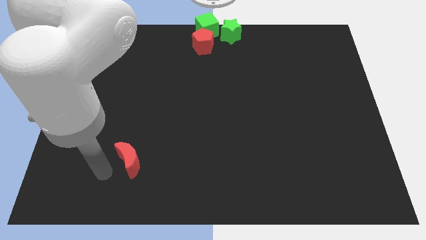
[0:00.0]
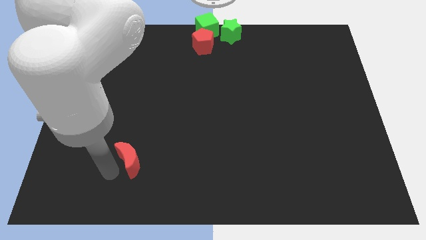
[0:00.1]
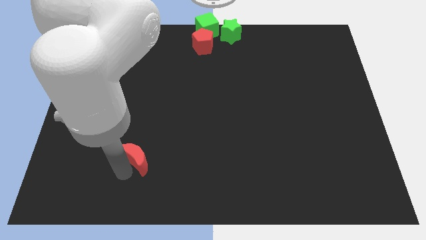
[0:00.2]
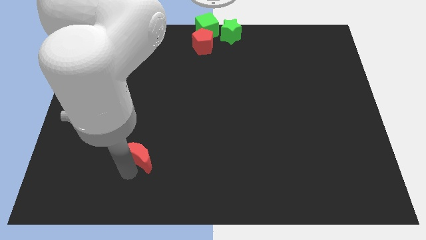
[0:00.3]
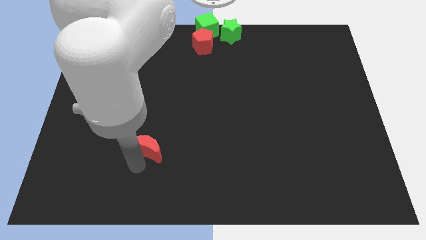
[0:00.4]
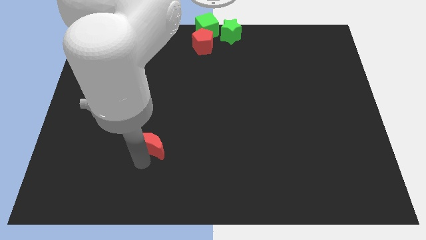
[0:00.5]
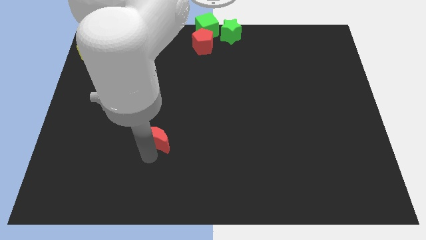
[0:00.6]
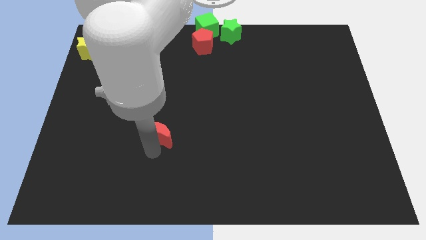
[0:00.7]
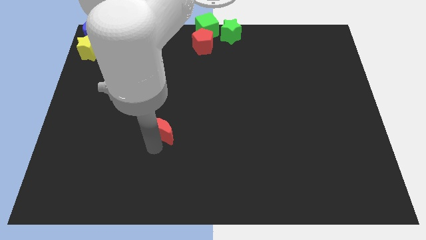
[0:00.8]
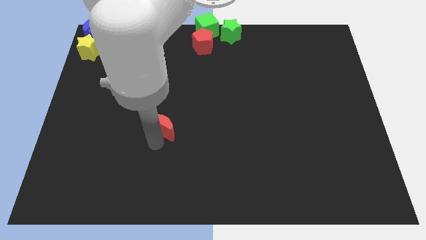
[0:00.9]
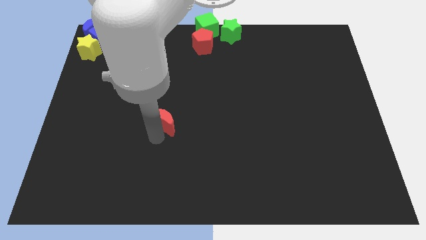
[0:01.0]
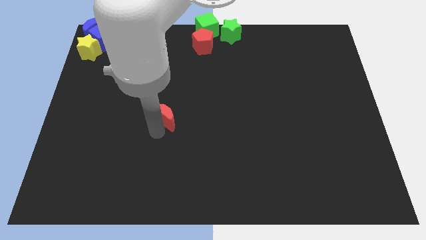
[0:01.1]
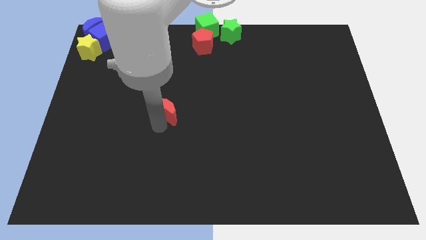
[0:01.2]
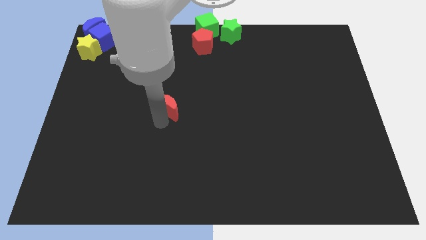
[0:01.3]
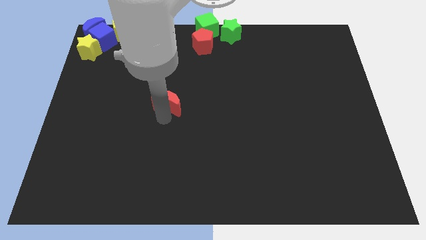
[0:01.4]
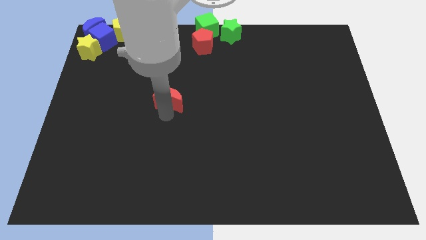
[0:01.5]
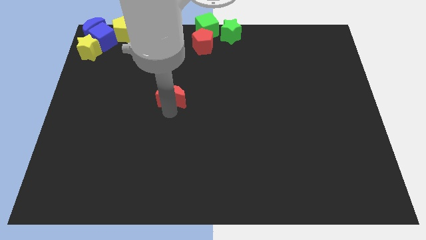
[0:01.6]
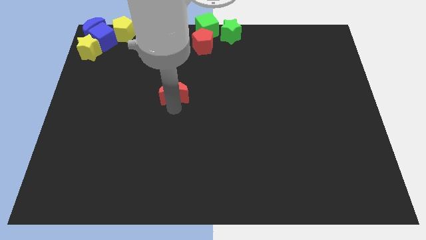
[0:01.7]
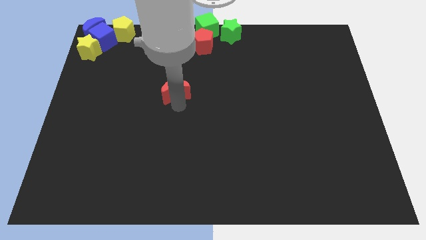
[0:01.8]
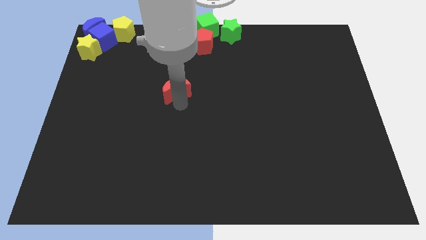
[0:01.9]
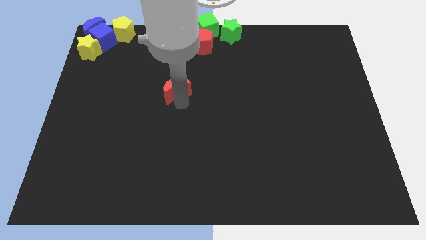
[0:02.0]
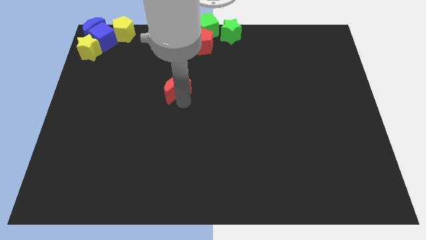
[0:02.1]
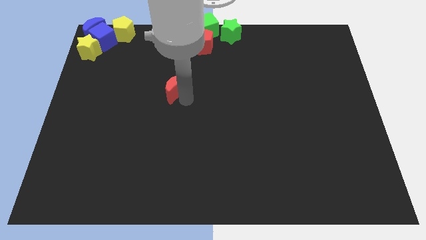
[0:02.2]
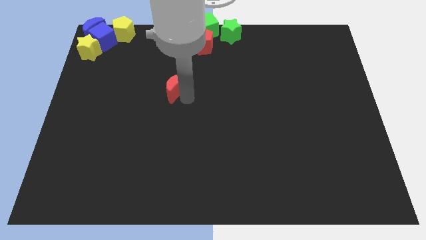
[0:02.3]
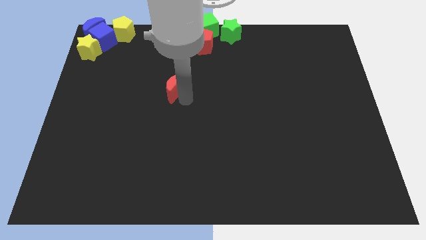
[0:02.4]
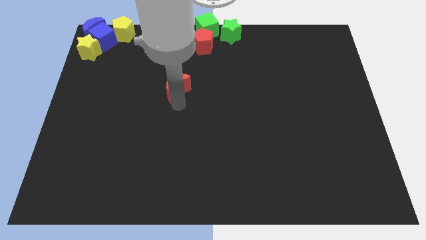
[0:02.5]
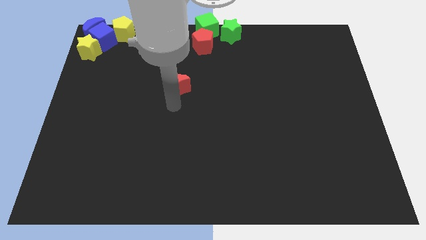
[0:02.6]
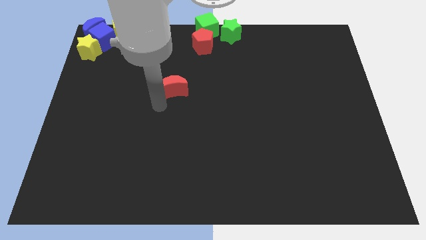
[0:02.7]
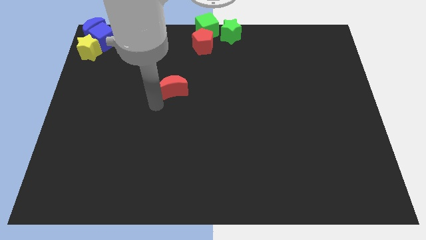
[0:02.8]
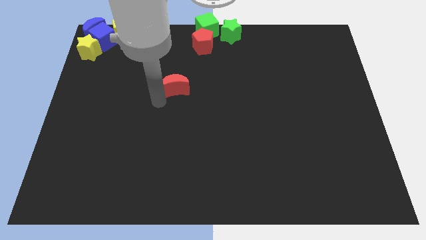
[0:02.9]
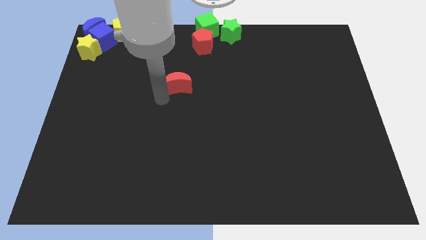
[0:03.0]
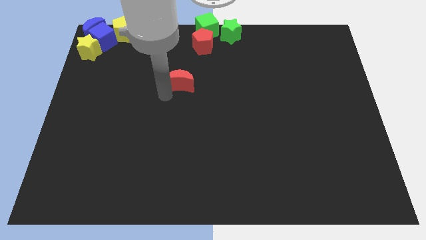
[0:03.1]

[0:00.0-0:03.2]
move red moon slightly up

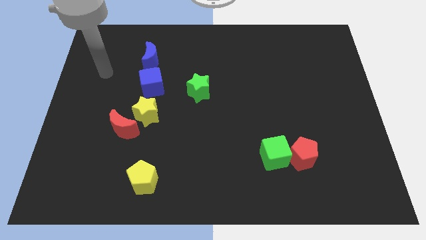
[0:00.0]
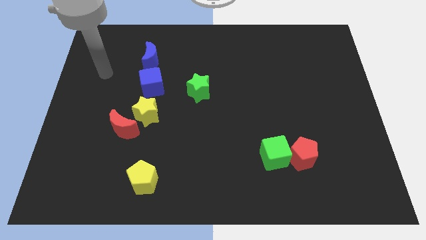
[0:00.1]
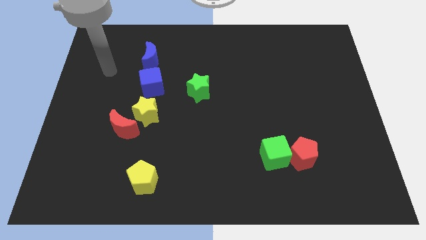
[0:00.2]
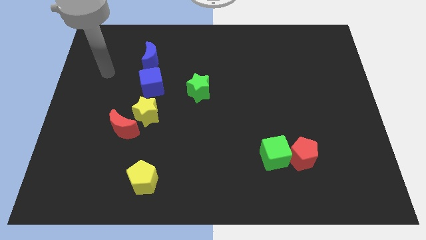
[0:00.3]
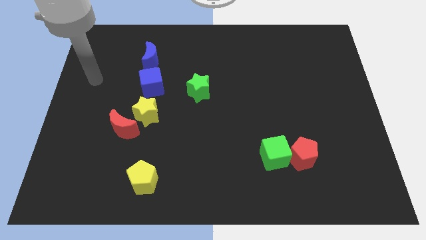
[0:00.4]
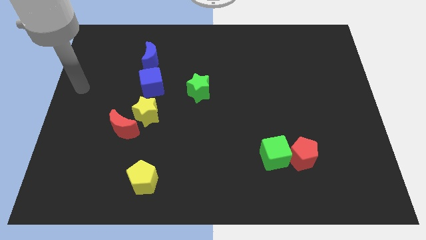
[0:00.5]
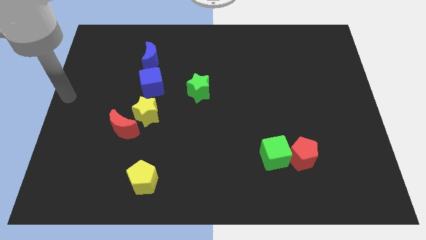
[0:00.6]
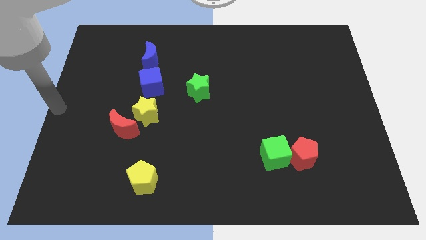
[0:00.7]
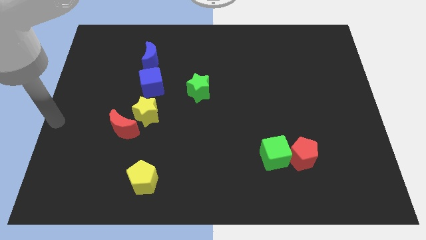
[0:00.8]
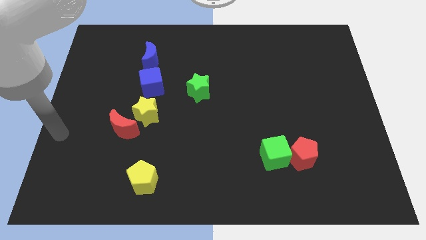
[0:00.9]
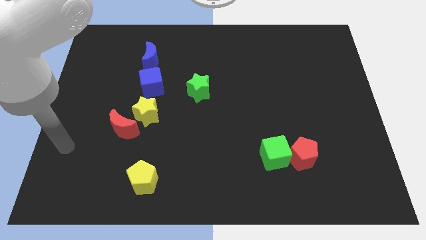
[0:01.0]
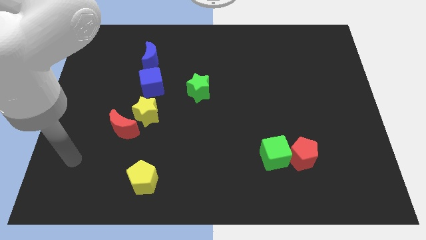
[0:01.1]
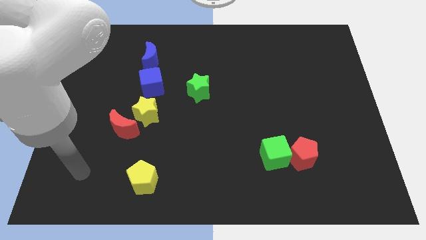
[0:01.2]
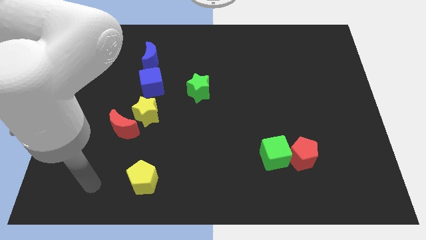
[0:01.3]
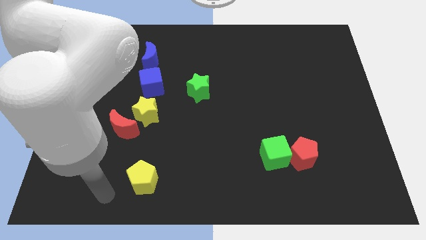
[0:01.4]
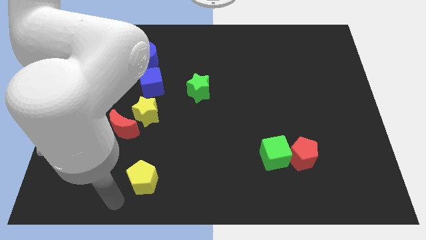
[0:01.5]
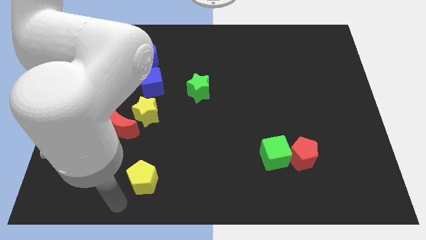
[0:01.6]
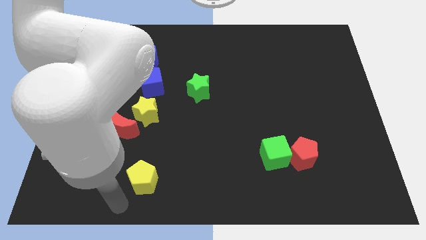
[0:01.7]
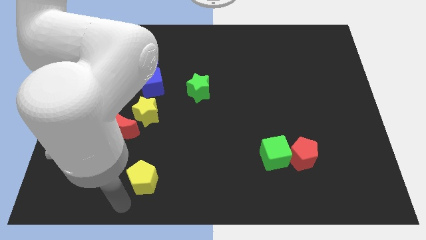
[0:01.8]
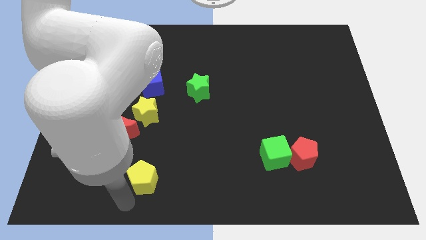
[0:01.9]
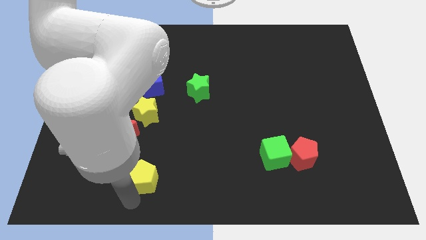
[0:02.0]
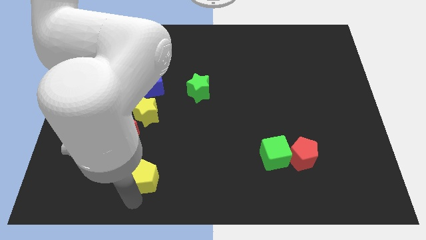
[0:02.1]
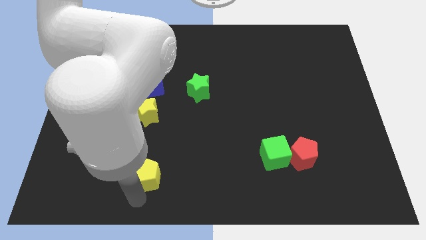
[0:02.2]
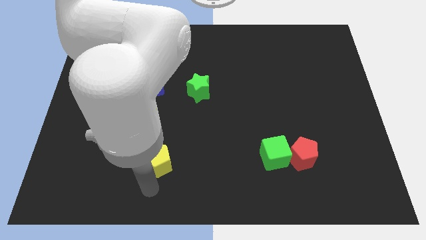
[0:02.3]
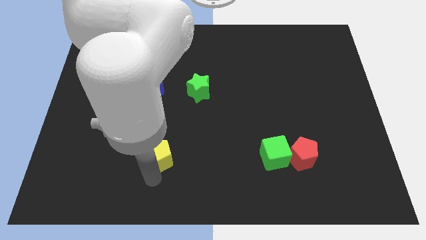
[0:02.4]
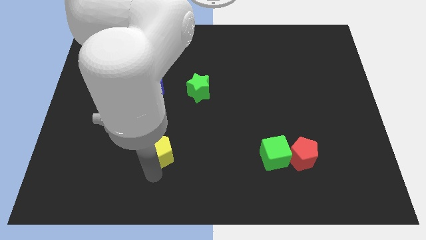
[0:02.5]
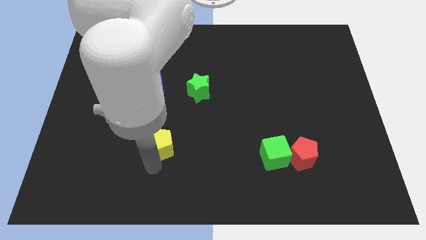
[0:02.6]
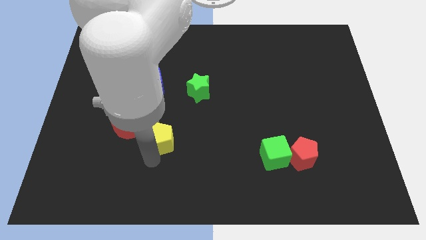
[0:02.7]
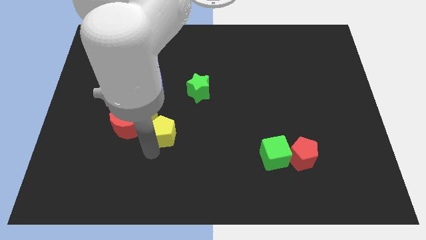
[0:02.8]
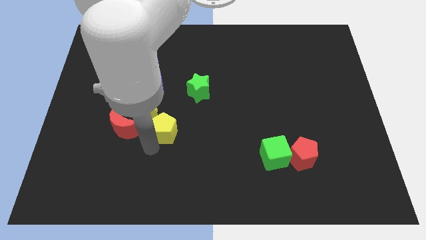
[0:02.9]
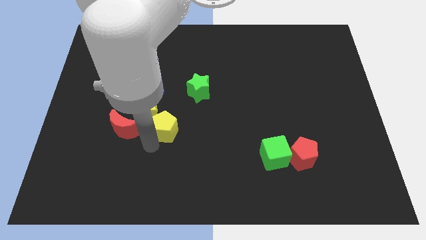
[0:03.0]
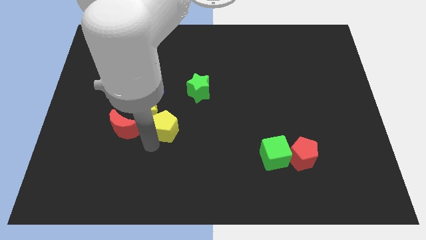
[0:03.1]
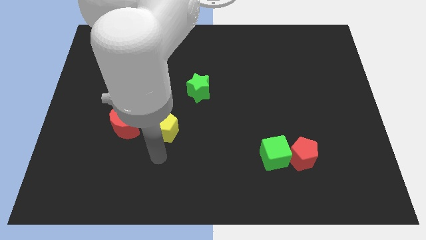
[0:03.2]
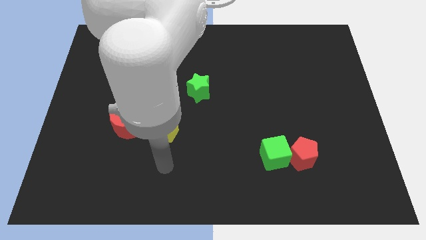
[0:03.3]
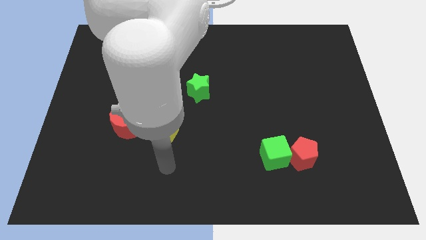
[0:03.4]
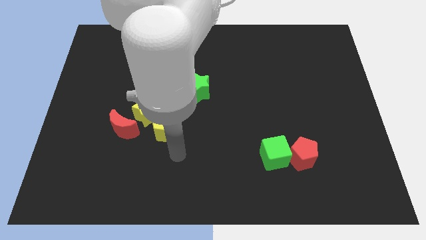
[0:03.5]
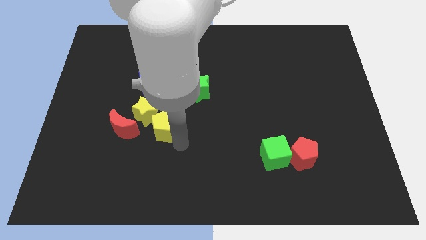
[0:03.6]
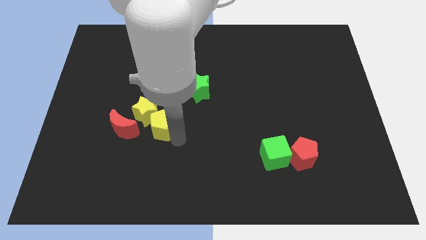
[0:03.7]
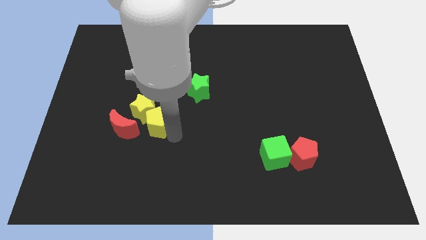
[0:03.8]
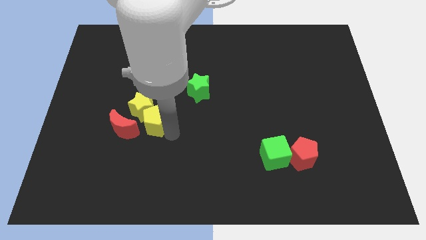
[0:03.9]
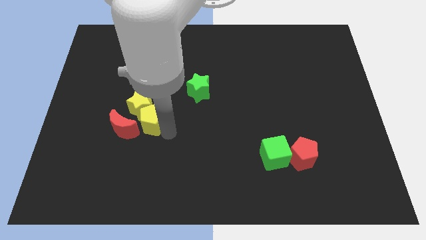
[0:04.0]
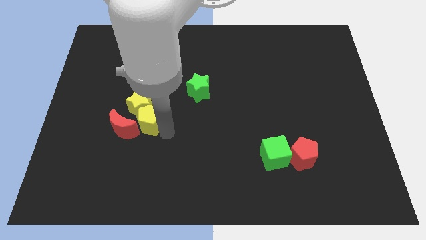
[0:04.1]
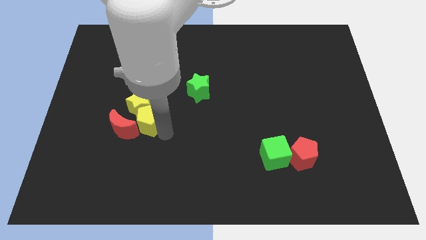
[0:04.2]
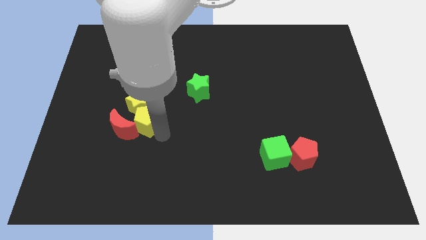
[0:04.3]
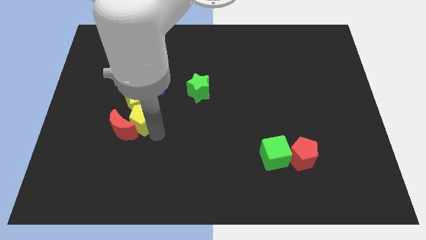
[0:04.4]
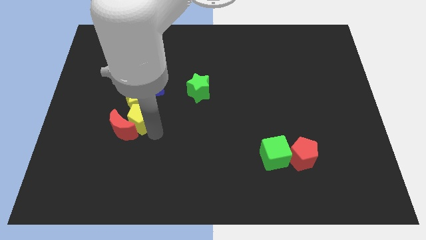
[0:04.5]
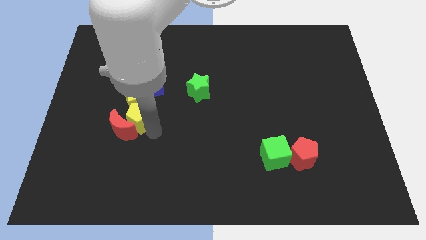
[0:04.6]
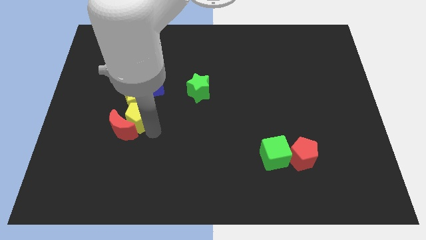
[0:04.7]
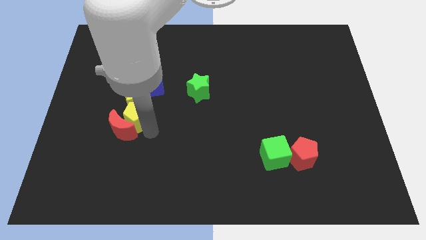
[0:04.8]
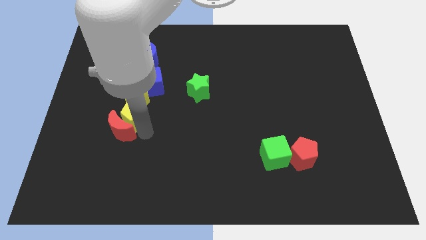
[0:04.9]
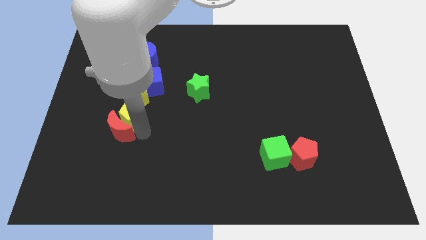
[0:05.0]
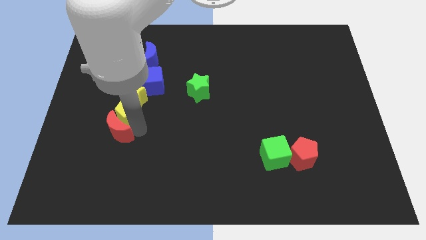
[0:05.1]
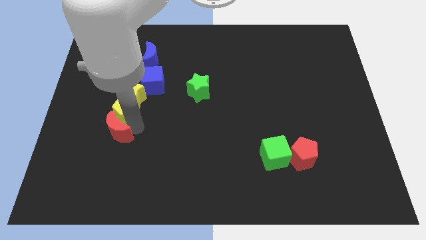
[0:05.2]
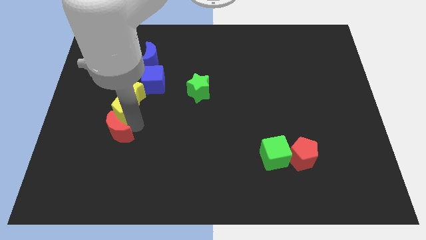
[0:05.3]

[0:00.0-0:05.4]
move yellow blocks in between the blue cube and the red crescent

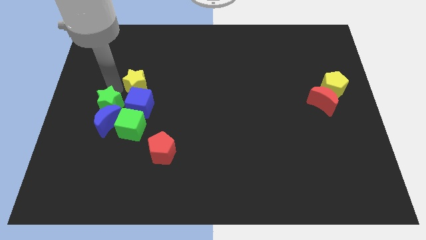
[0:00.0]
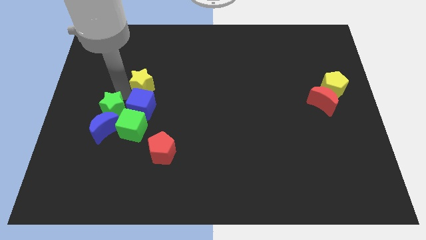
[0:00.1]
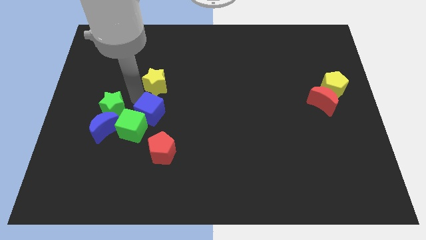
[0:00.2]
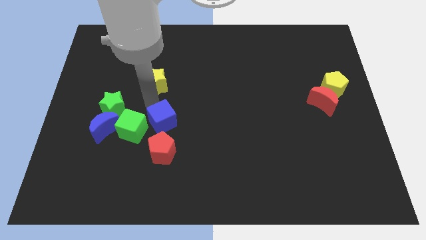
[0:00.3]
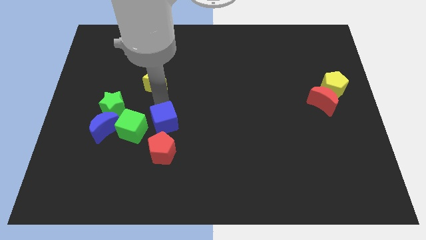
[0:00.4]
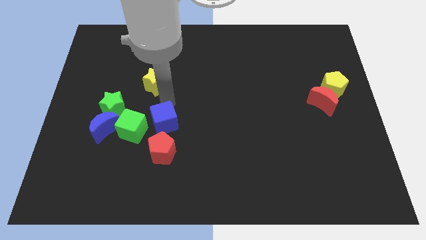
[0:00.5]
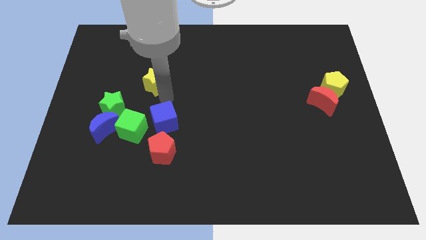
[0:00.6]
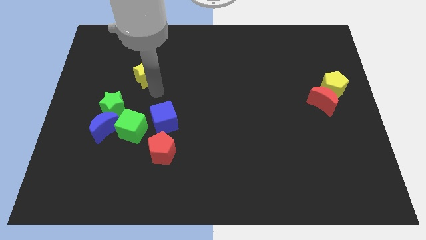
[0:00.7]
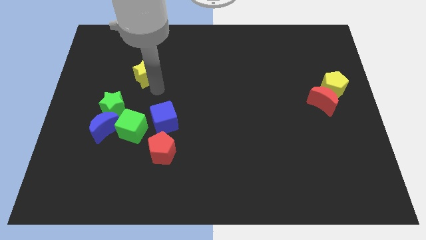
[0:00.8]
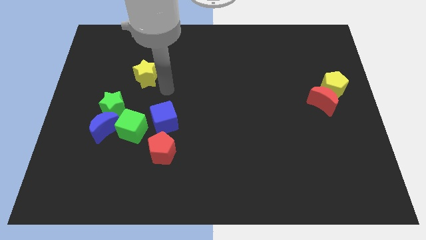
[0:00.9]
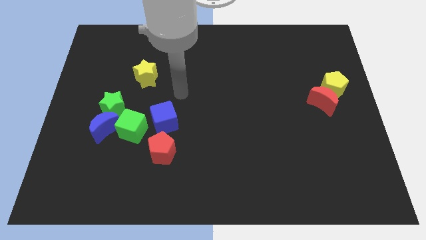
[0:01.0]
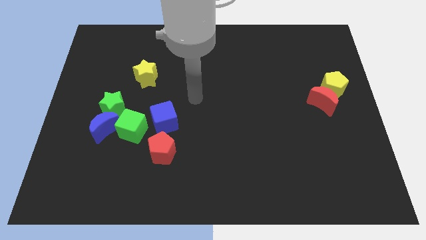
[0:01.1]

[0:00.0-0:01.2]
separate the blue cube from the yellow star
